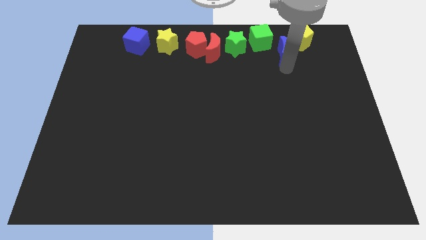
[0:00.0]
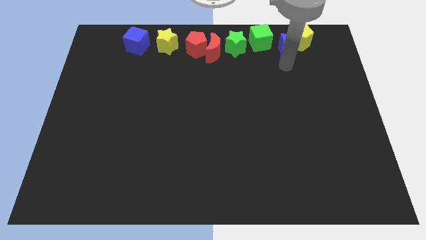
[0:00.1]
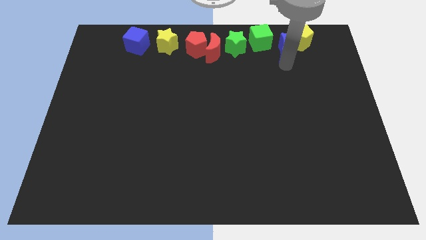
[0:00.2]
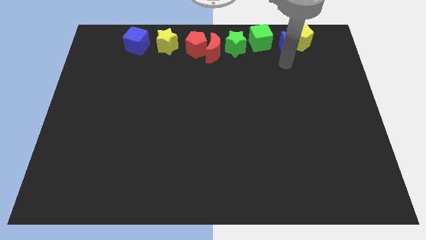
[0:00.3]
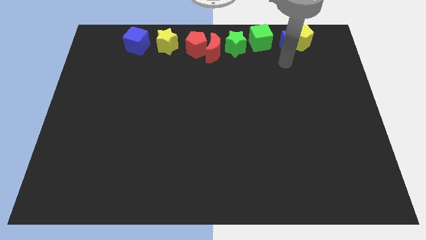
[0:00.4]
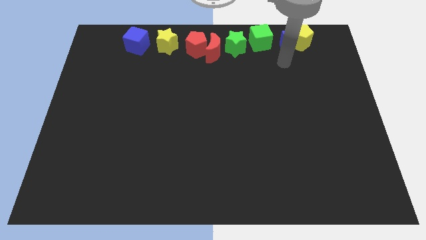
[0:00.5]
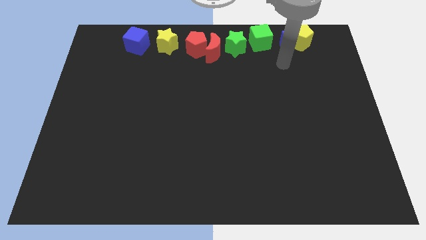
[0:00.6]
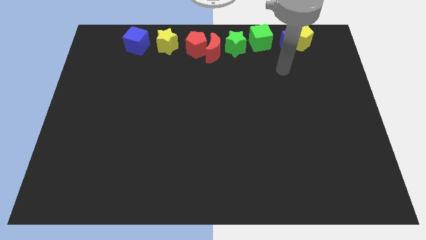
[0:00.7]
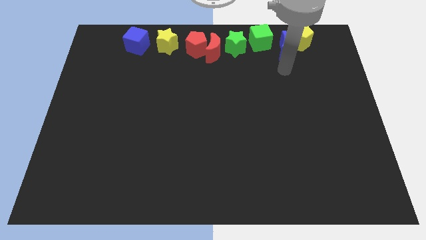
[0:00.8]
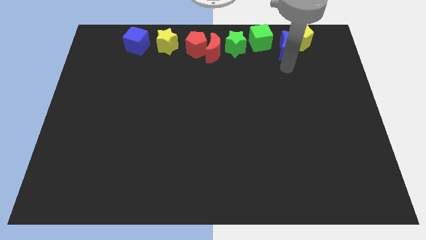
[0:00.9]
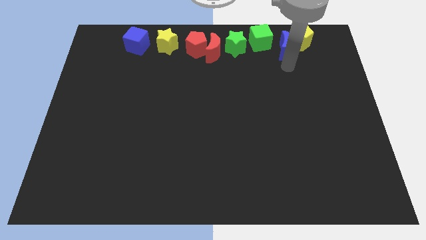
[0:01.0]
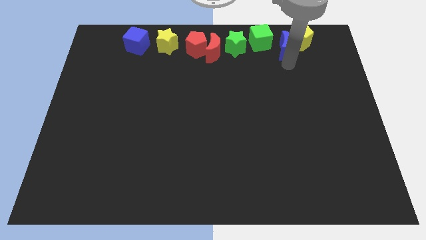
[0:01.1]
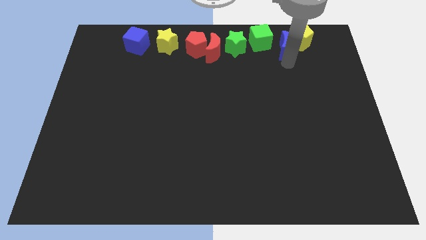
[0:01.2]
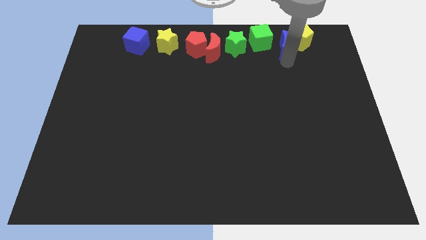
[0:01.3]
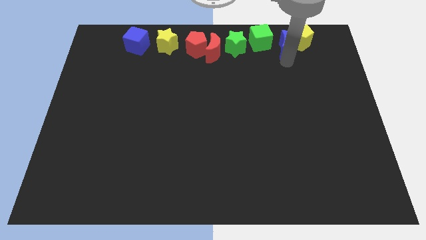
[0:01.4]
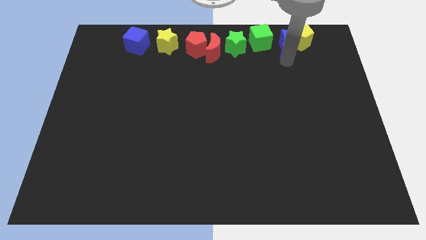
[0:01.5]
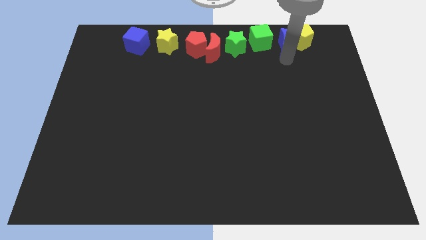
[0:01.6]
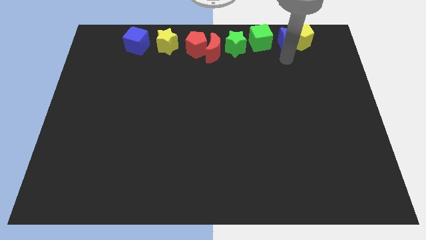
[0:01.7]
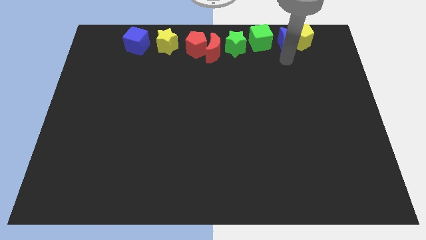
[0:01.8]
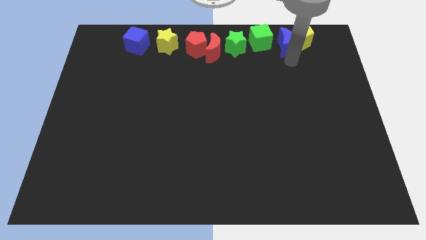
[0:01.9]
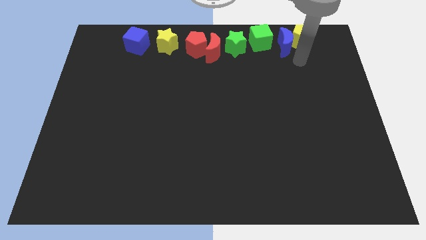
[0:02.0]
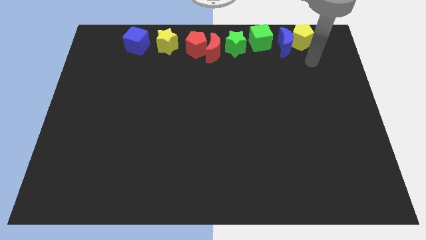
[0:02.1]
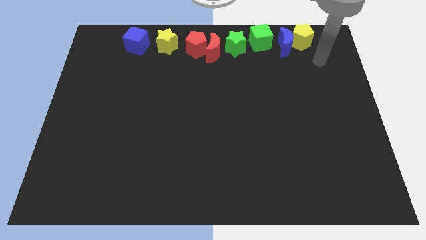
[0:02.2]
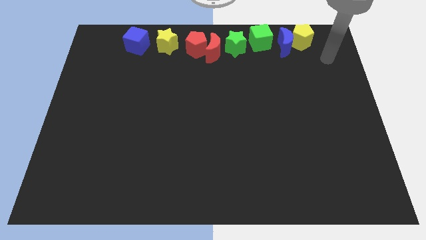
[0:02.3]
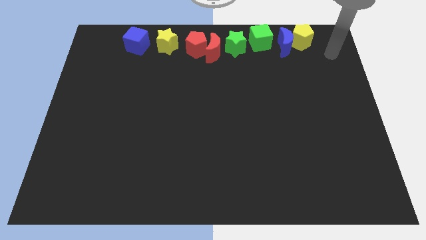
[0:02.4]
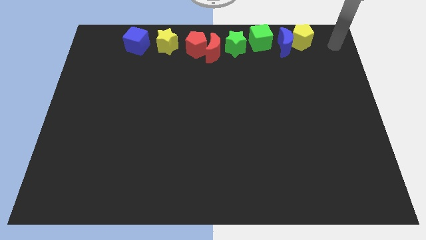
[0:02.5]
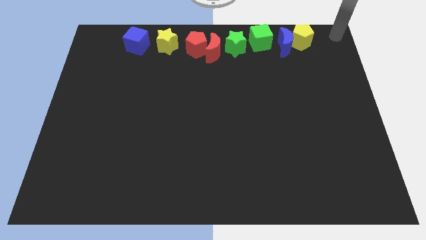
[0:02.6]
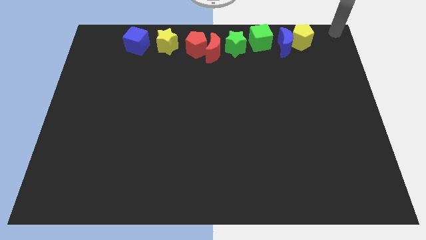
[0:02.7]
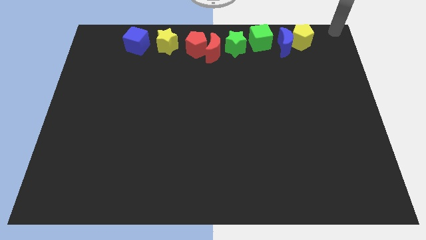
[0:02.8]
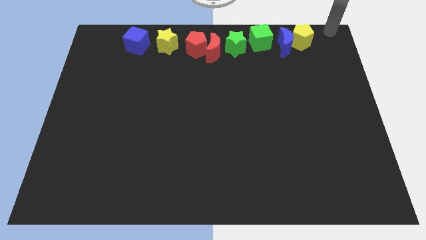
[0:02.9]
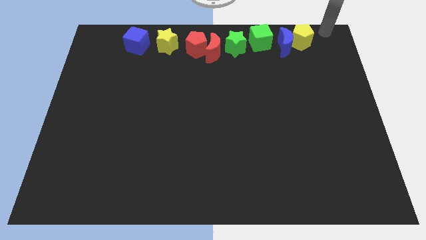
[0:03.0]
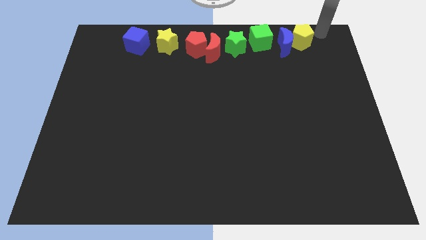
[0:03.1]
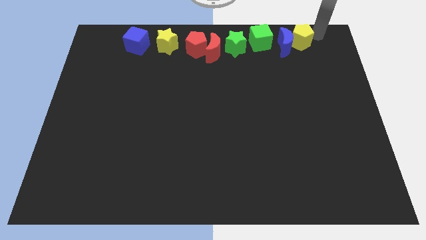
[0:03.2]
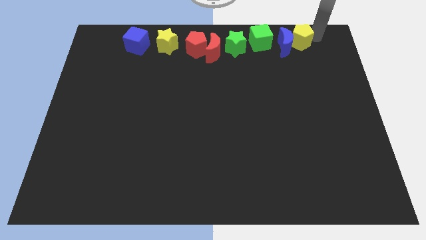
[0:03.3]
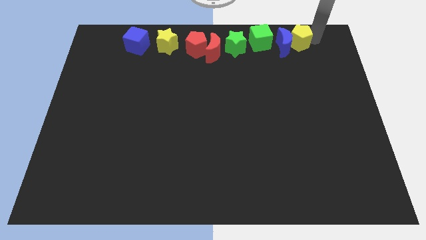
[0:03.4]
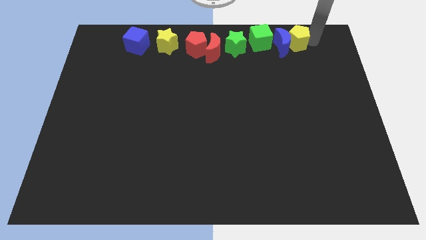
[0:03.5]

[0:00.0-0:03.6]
place the blue crescent in between the yellow blocks and green cube

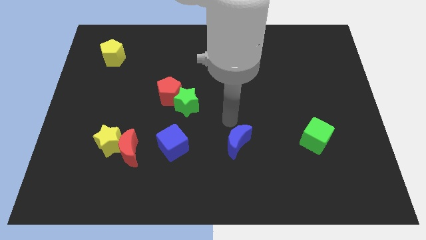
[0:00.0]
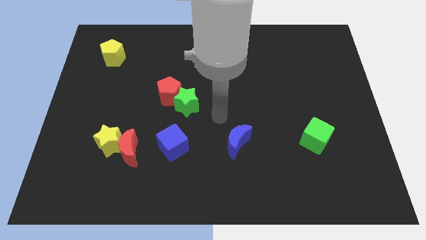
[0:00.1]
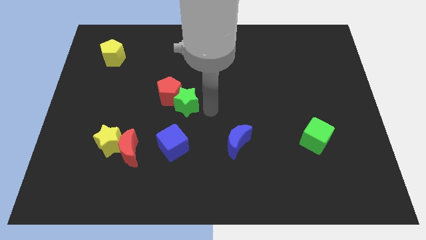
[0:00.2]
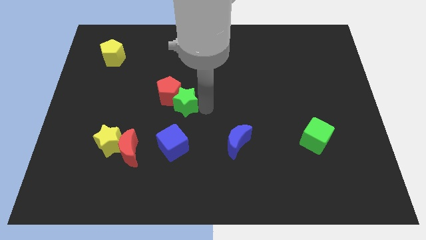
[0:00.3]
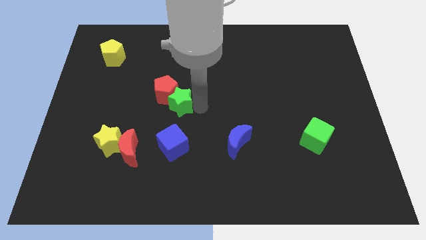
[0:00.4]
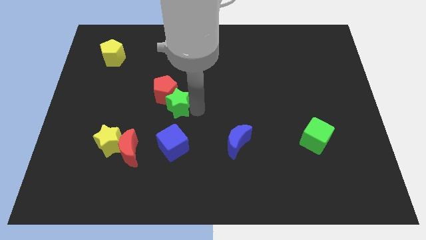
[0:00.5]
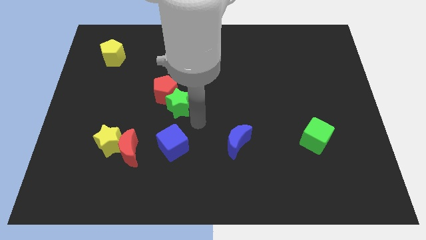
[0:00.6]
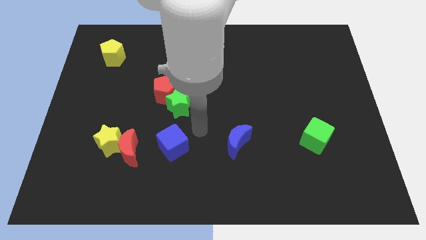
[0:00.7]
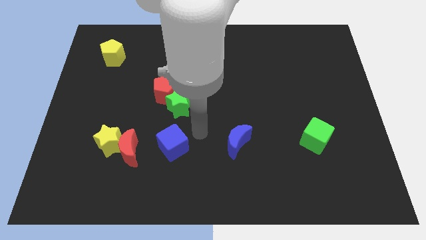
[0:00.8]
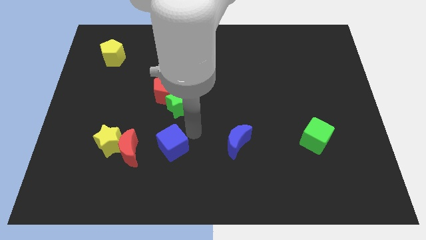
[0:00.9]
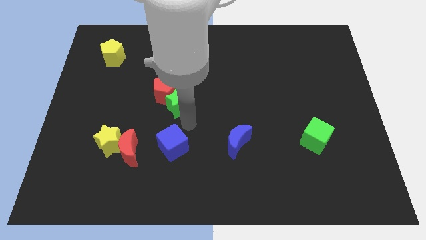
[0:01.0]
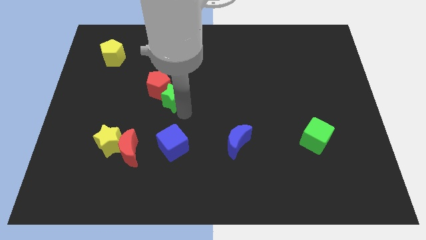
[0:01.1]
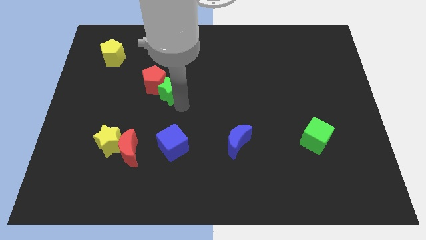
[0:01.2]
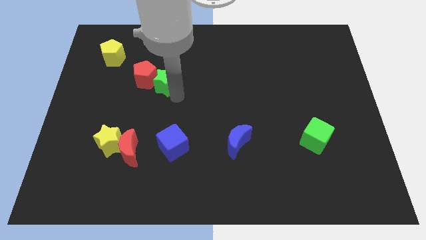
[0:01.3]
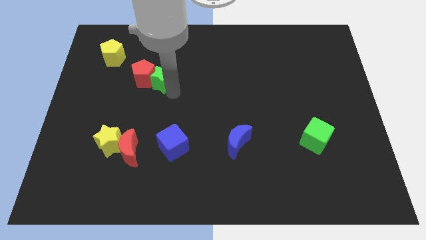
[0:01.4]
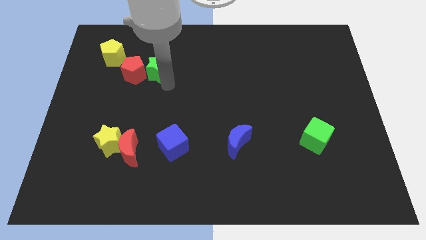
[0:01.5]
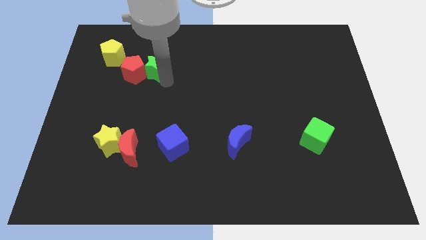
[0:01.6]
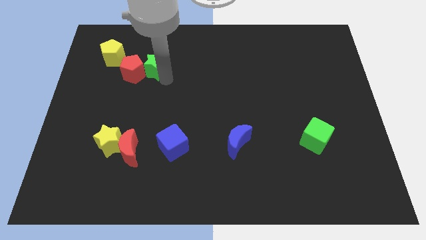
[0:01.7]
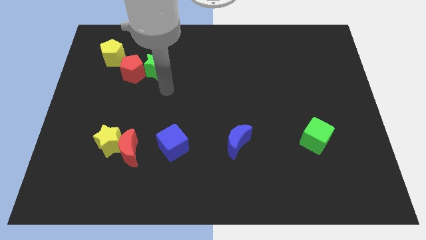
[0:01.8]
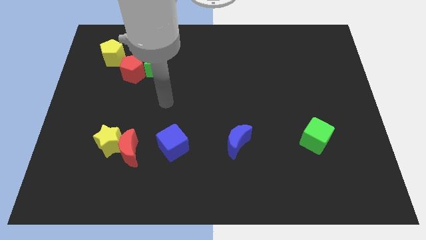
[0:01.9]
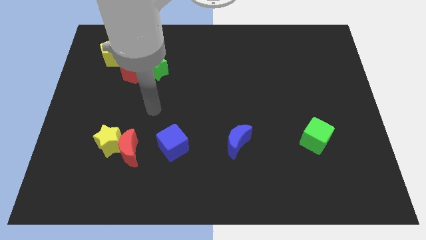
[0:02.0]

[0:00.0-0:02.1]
place your arm in between the green star and blue cube

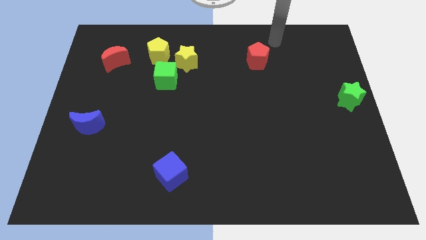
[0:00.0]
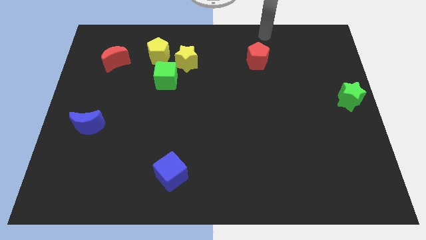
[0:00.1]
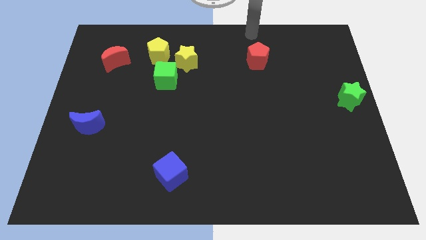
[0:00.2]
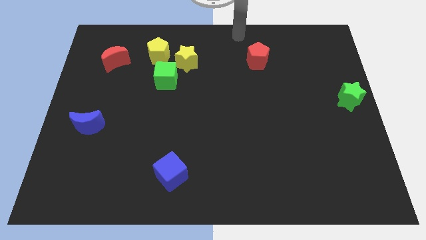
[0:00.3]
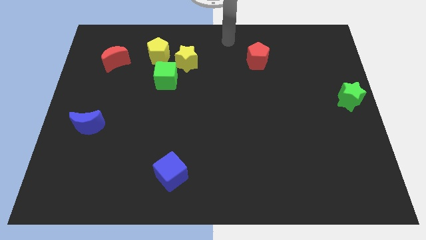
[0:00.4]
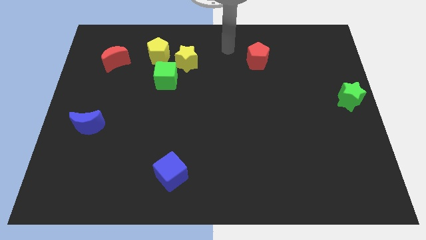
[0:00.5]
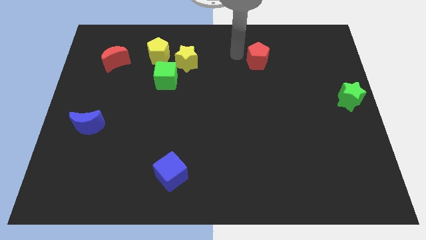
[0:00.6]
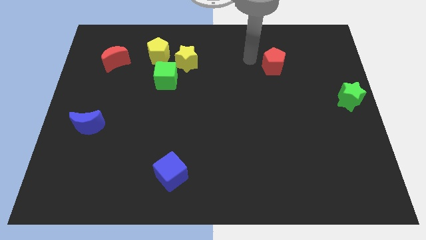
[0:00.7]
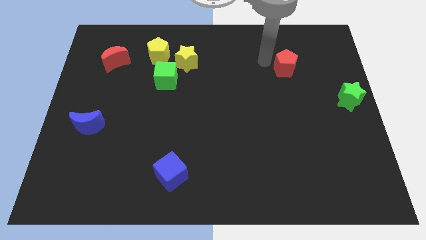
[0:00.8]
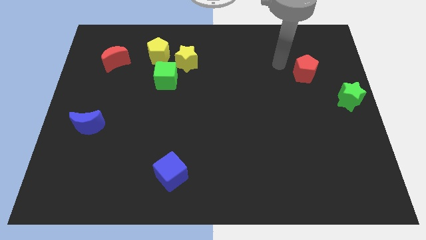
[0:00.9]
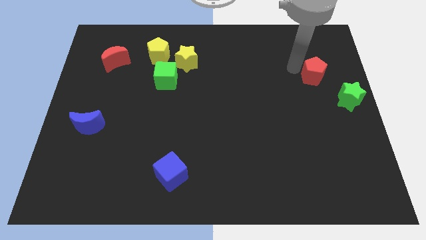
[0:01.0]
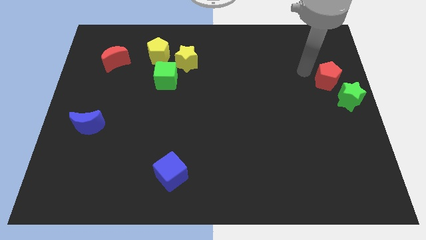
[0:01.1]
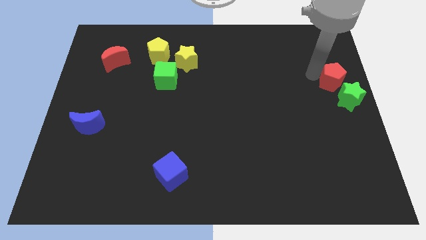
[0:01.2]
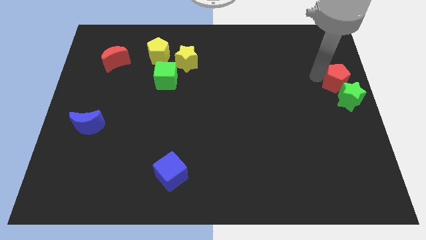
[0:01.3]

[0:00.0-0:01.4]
push the red pentagon into the green star

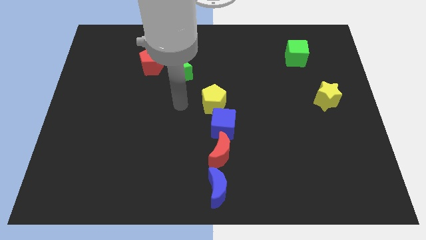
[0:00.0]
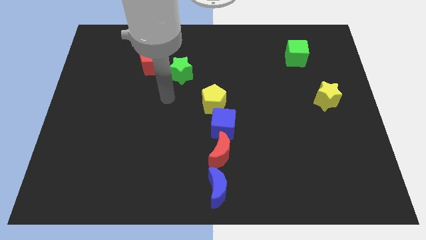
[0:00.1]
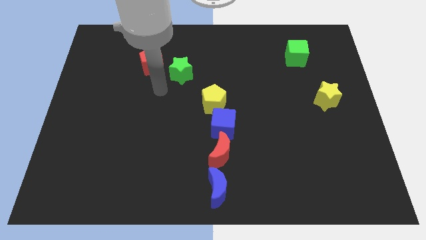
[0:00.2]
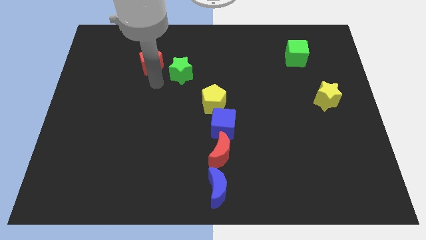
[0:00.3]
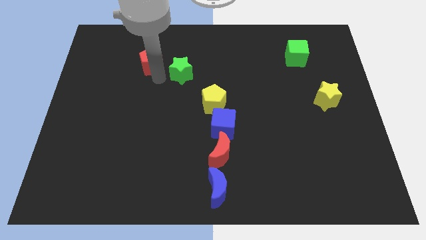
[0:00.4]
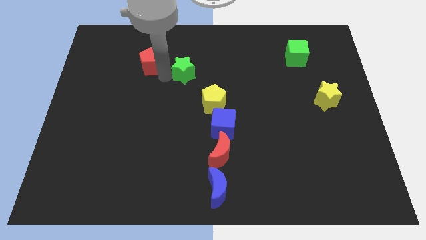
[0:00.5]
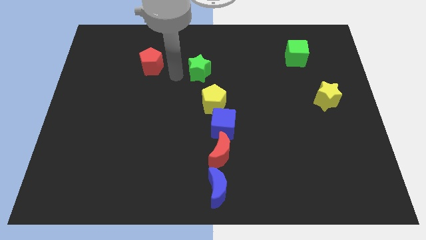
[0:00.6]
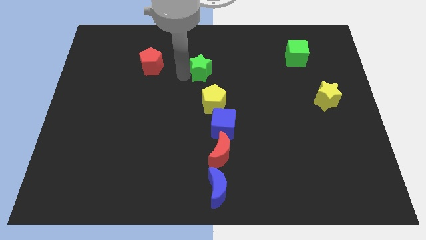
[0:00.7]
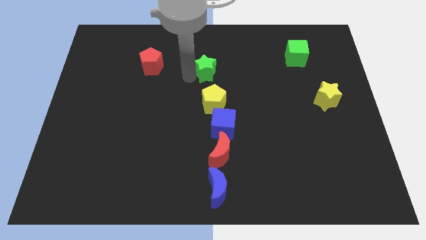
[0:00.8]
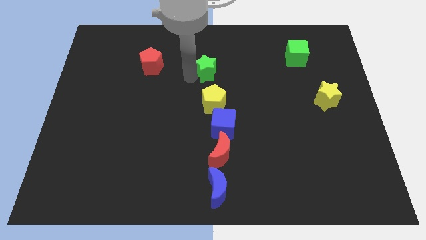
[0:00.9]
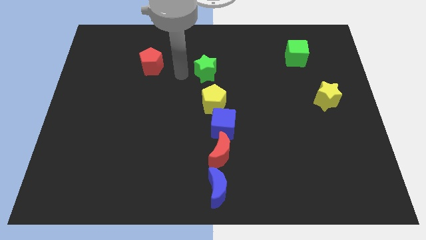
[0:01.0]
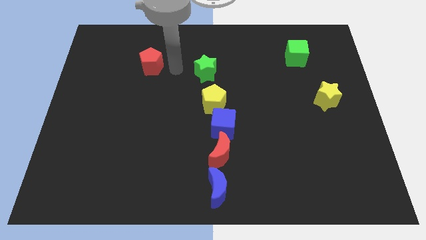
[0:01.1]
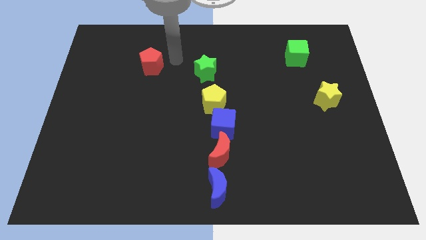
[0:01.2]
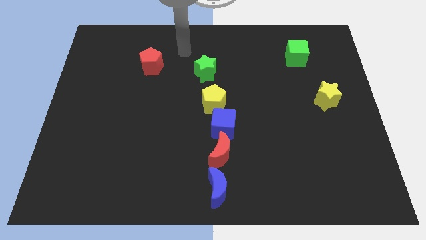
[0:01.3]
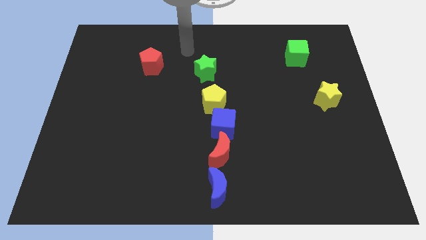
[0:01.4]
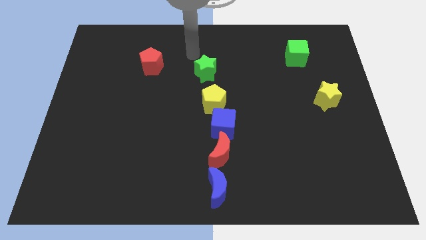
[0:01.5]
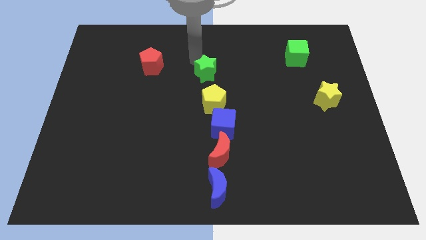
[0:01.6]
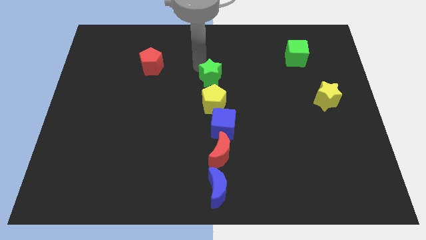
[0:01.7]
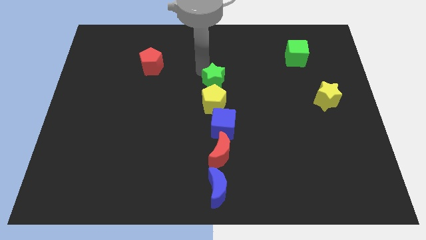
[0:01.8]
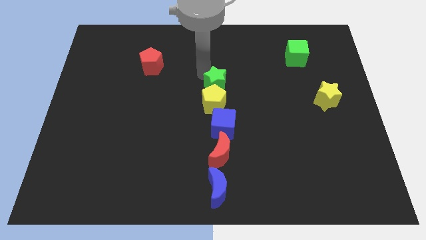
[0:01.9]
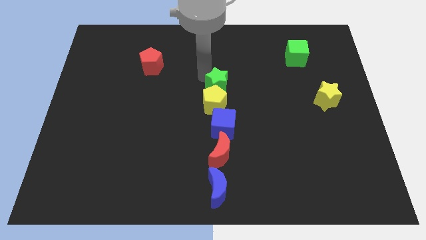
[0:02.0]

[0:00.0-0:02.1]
push the green star above the yellow pentagon
